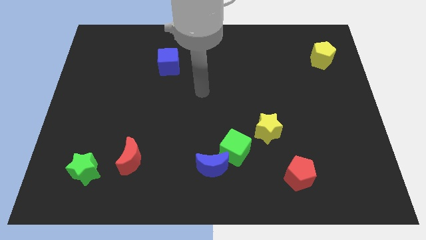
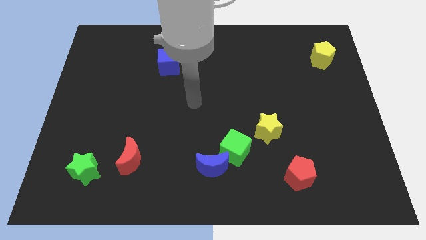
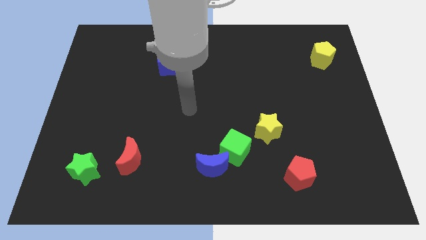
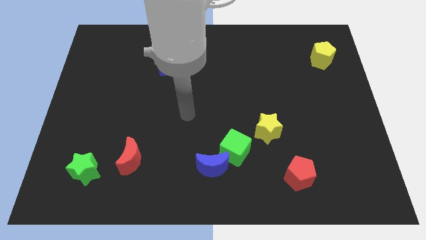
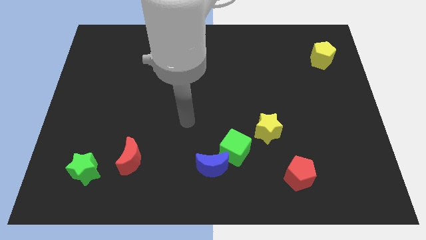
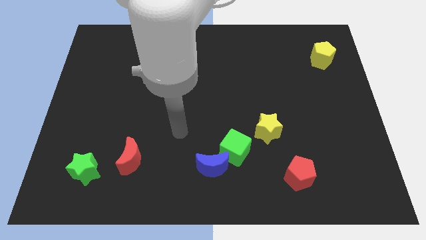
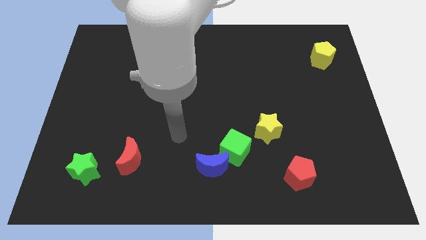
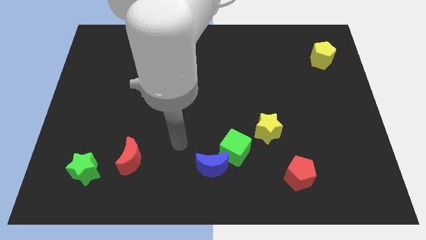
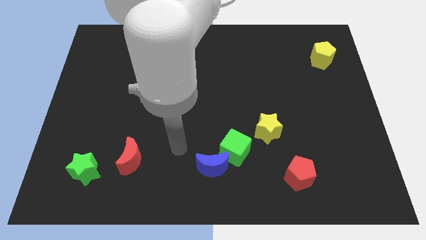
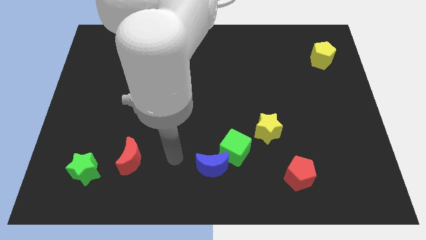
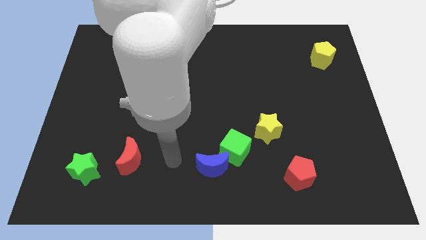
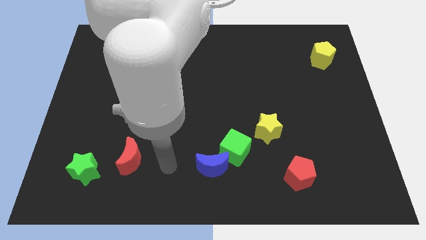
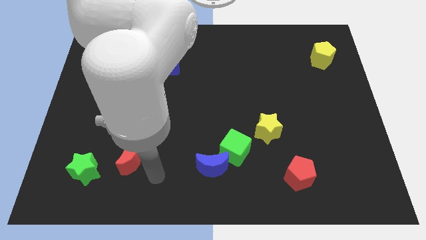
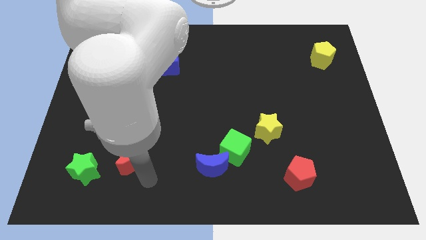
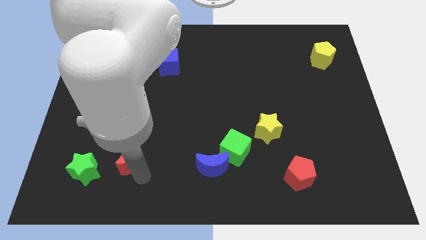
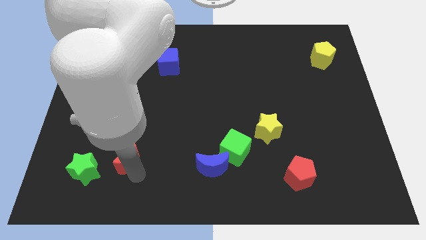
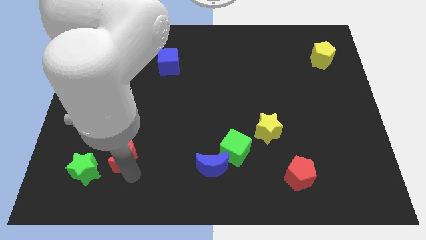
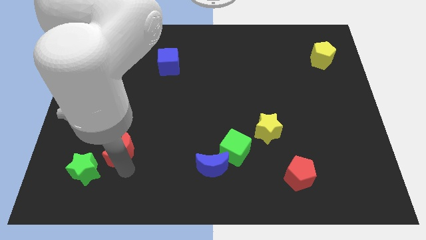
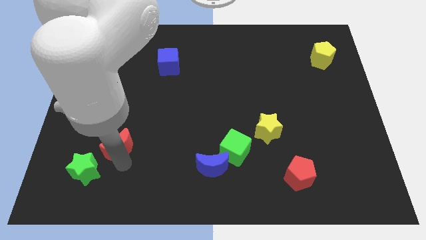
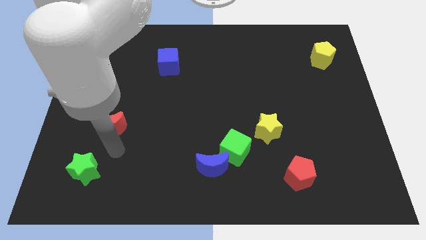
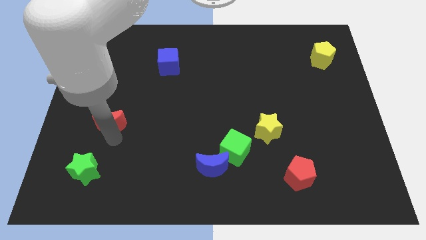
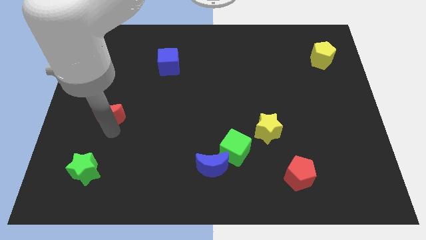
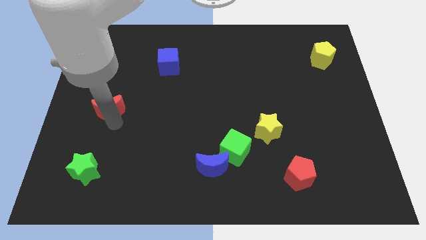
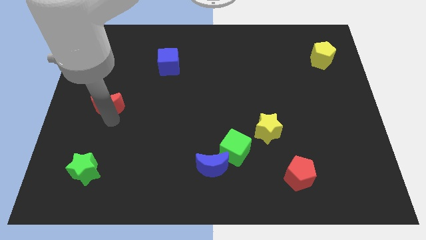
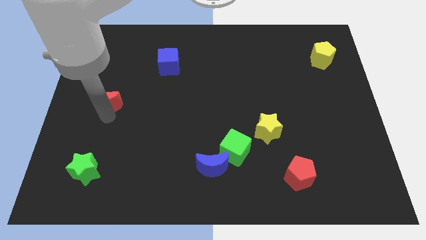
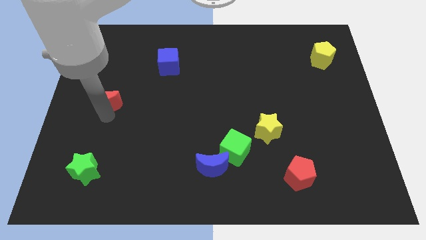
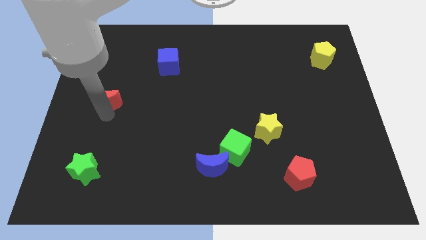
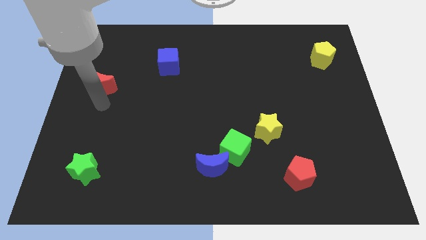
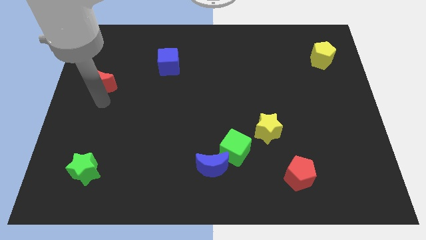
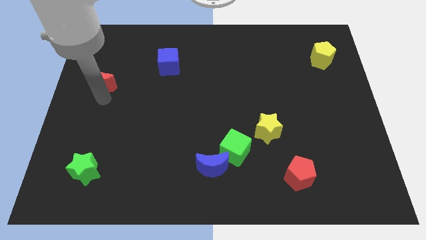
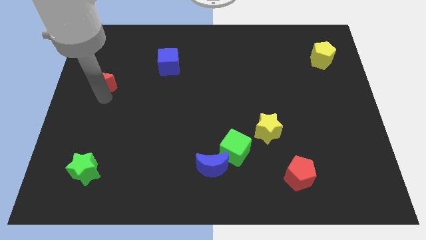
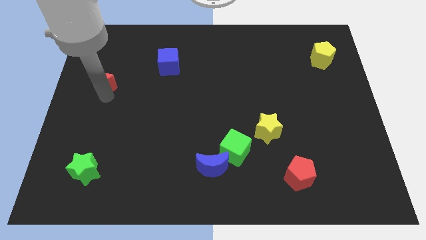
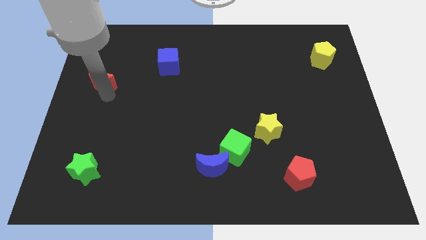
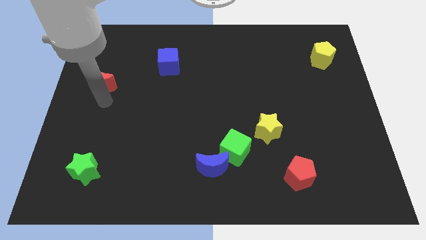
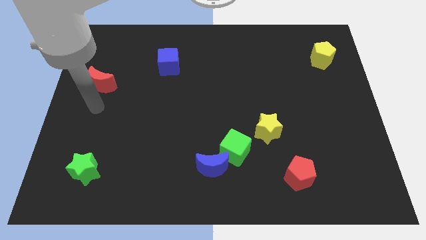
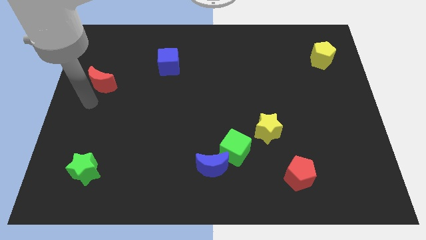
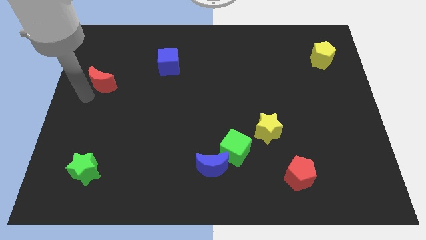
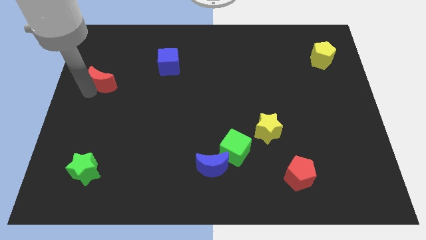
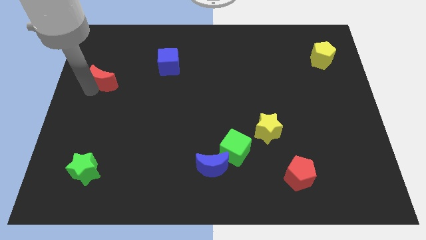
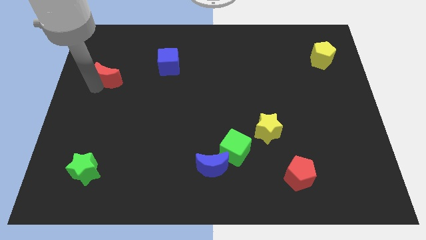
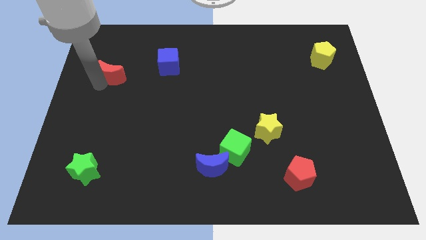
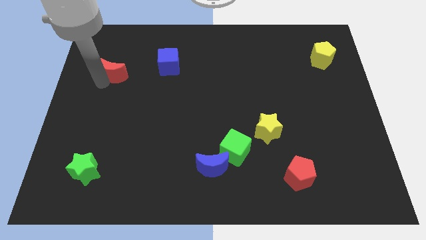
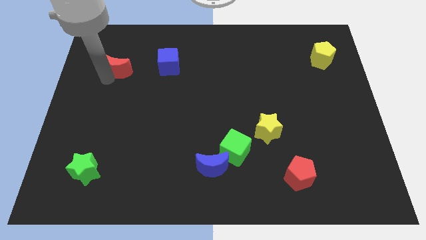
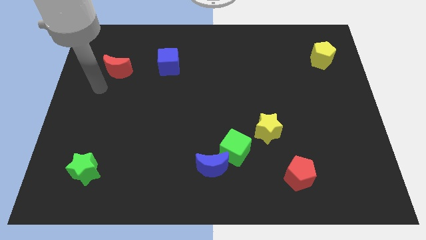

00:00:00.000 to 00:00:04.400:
move the red crescent to the left of blue block

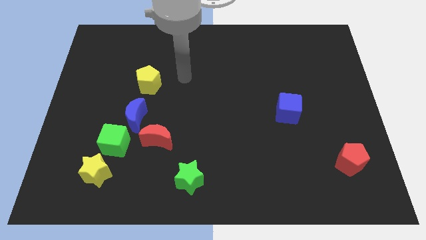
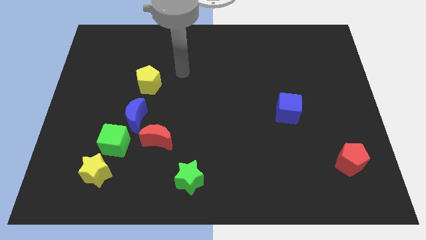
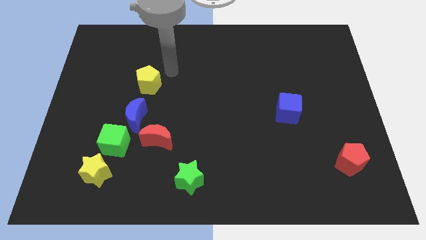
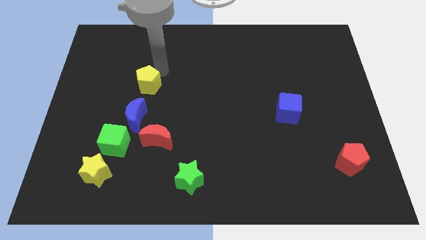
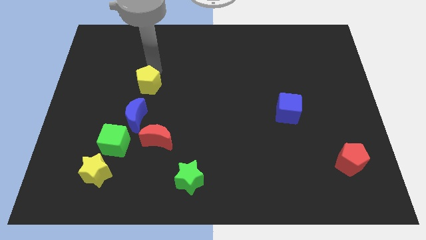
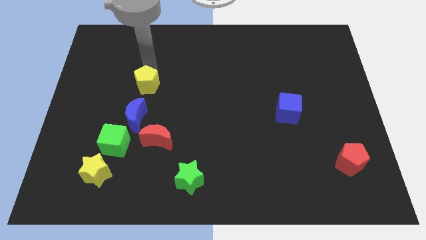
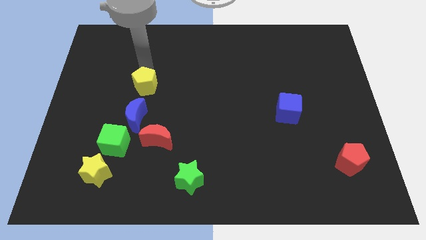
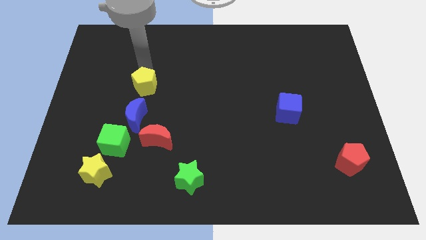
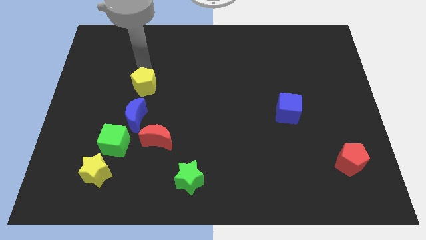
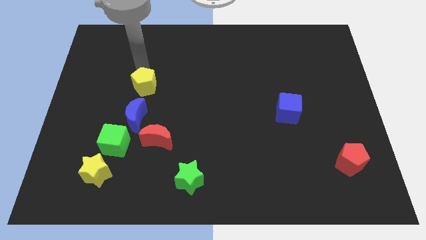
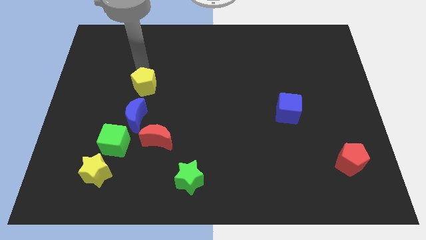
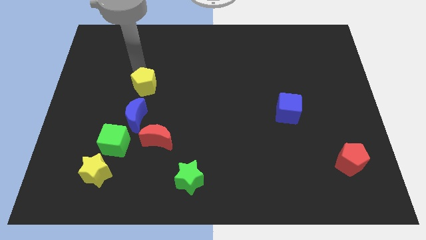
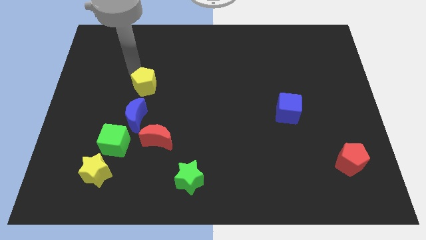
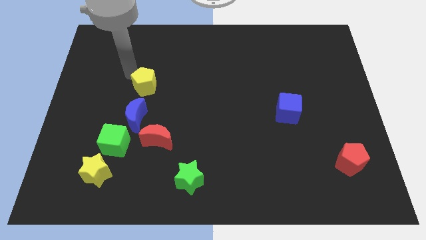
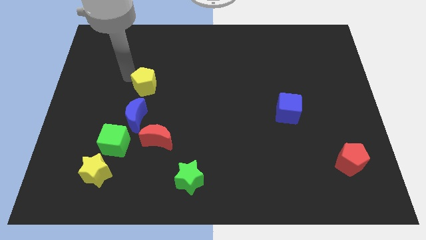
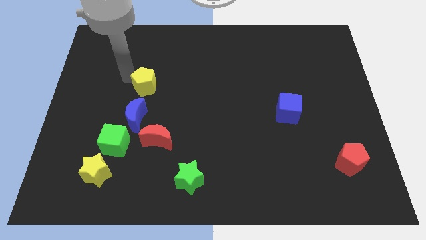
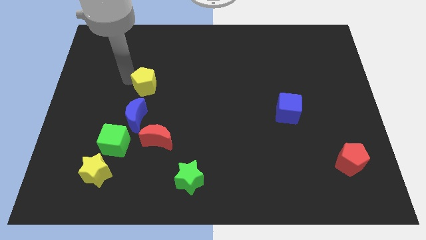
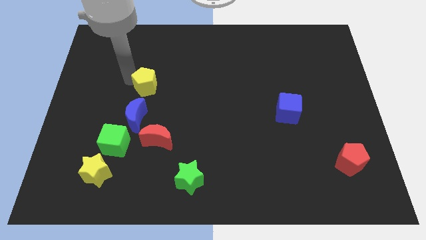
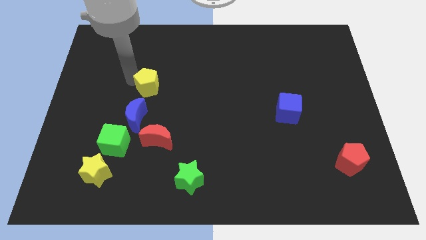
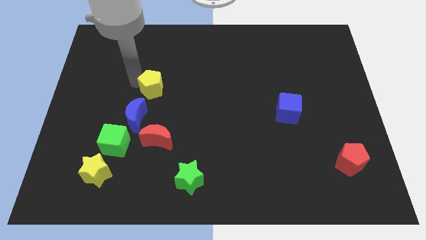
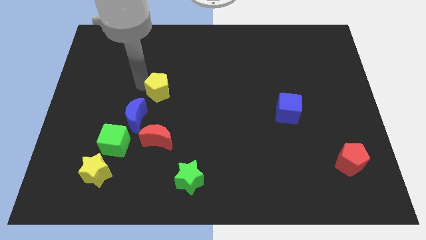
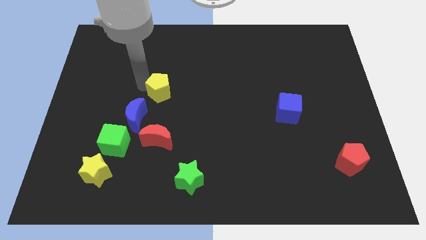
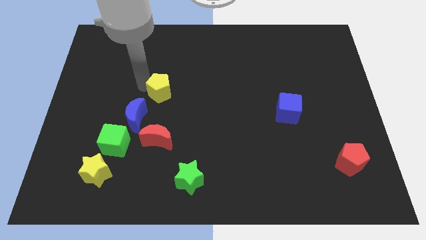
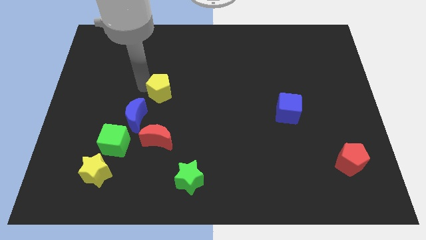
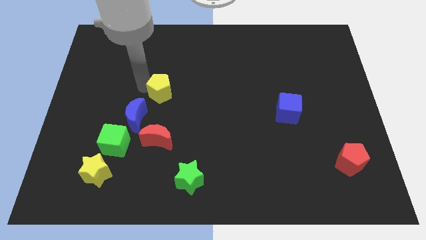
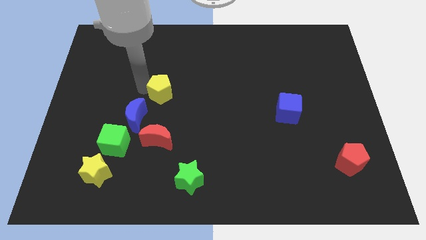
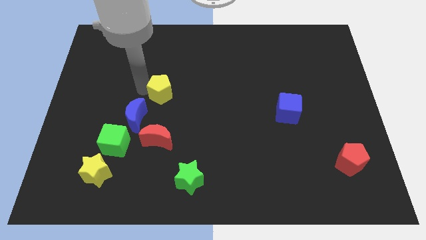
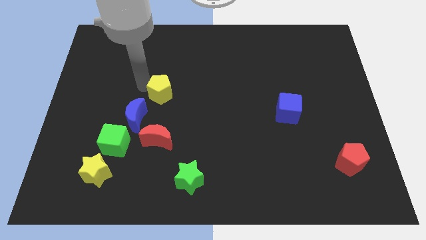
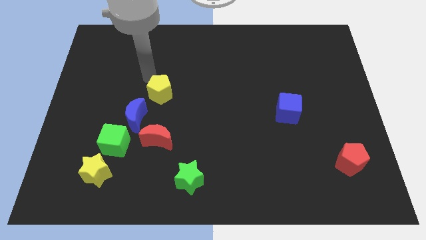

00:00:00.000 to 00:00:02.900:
push the yellow pentagon towards the center

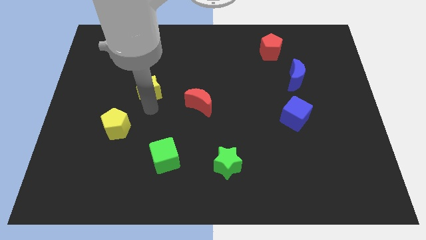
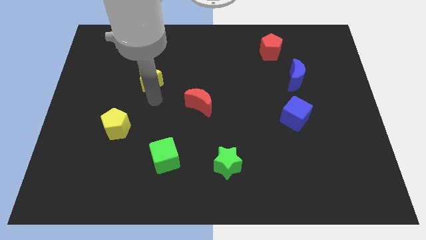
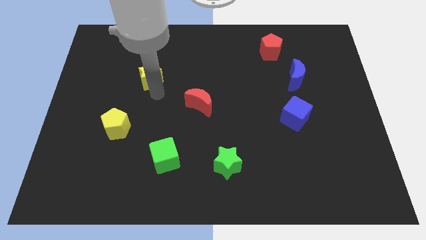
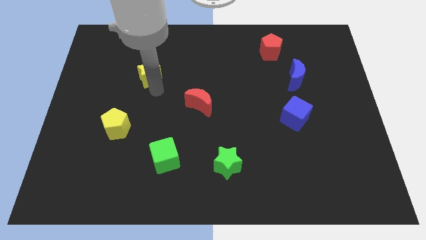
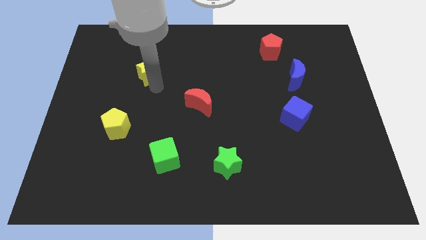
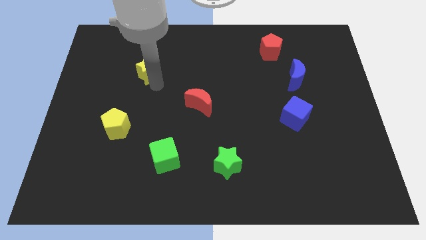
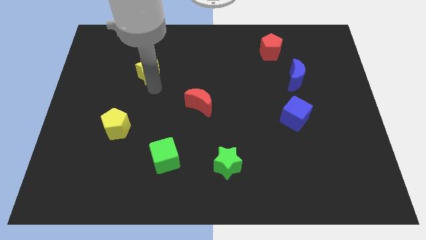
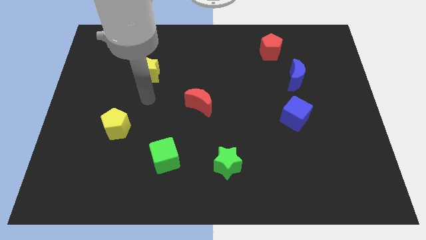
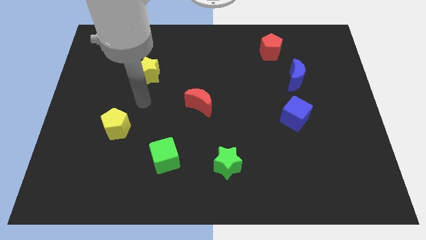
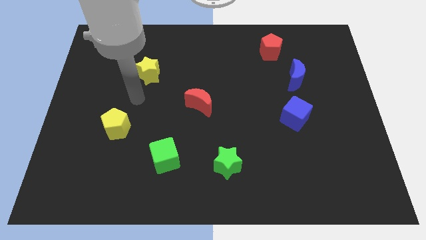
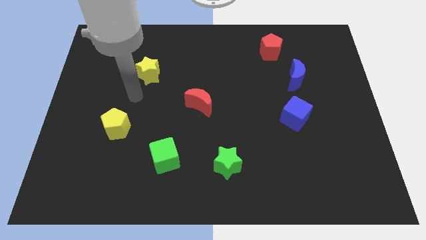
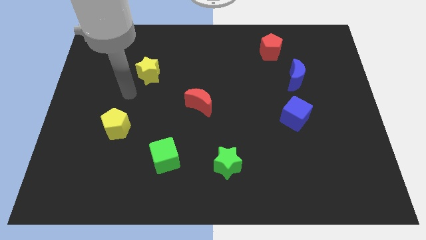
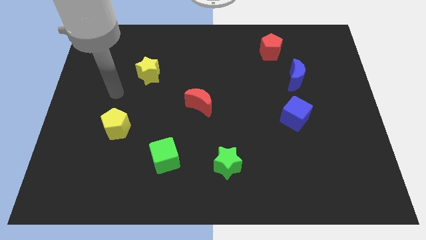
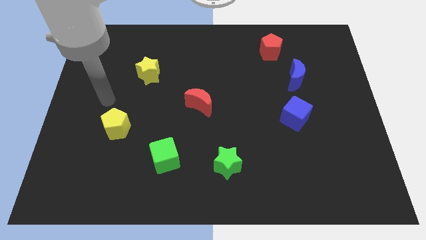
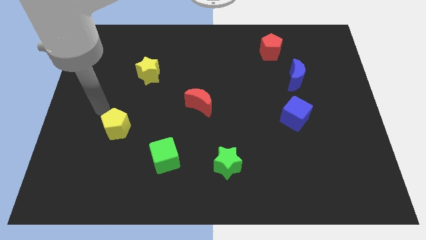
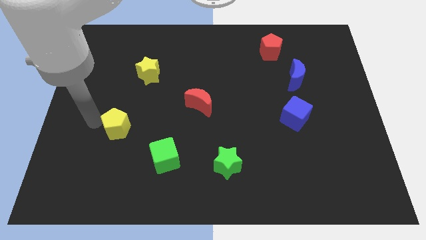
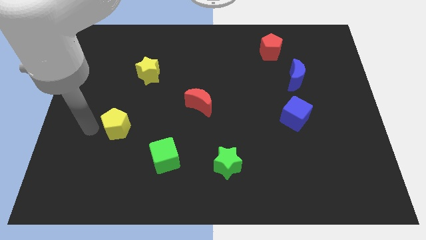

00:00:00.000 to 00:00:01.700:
move the yellow star to the top of the board
